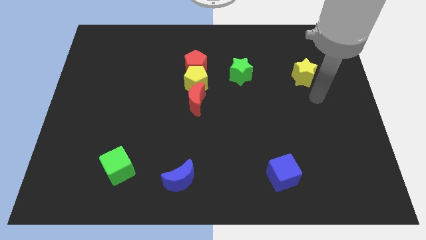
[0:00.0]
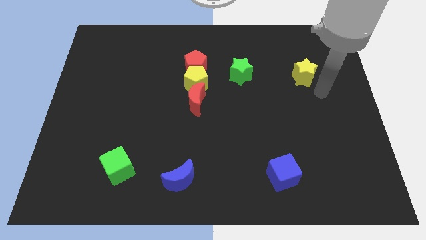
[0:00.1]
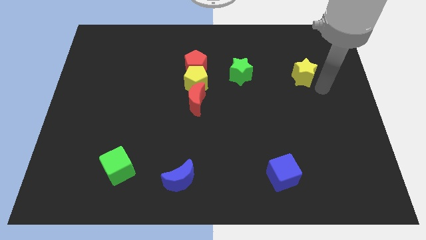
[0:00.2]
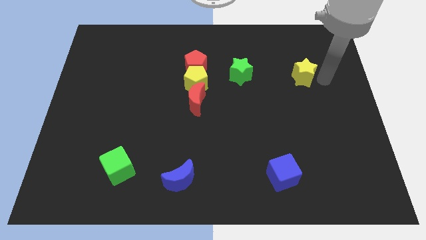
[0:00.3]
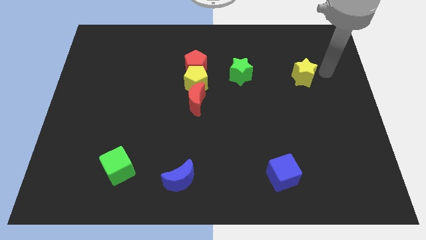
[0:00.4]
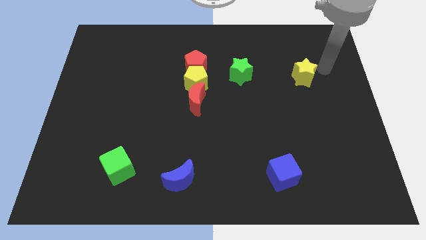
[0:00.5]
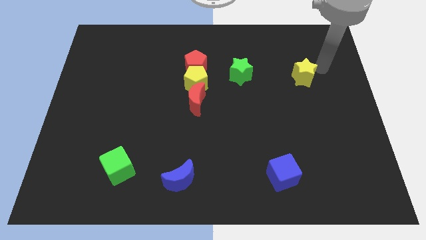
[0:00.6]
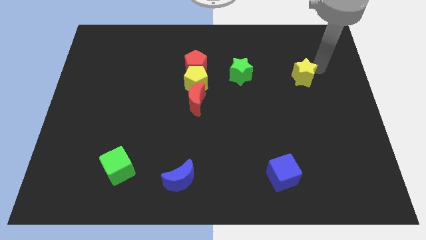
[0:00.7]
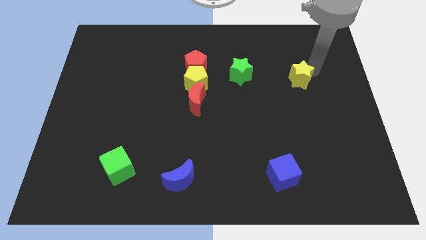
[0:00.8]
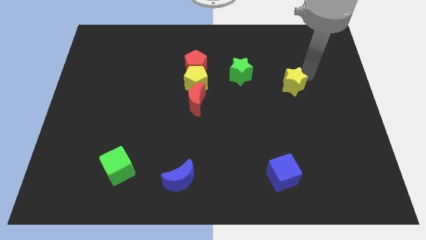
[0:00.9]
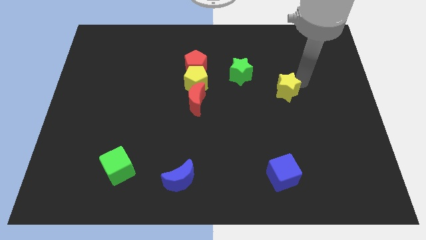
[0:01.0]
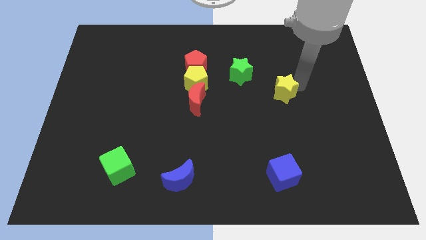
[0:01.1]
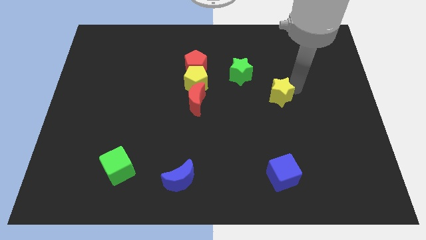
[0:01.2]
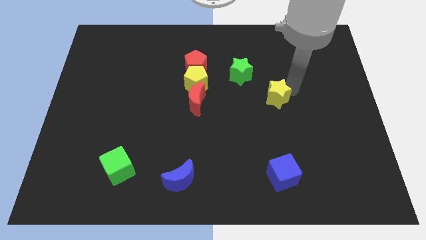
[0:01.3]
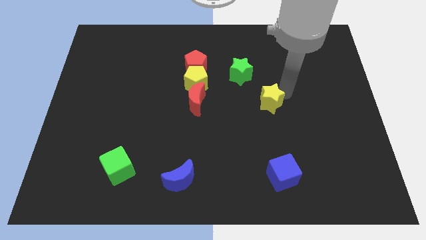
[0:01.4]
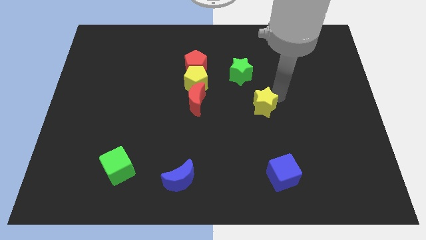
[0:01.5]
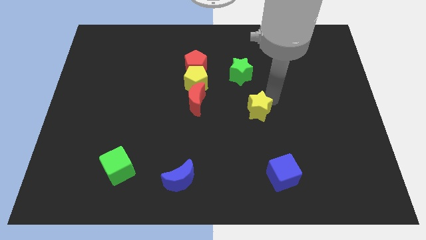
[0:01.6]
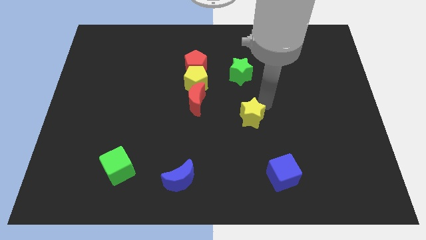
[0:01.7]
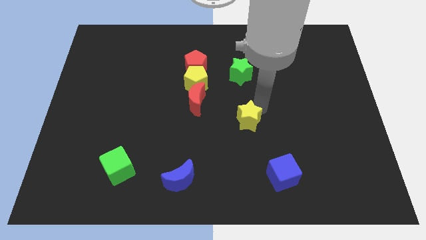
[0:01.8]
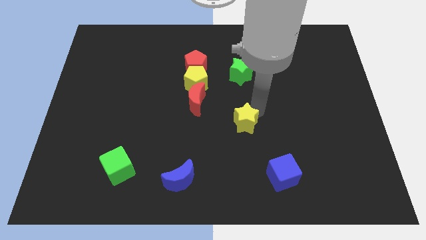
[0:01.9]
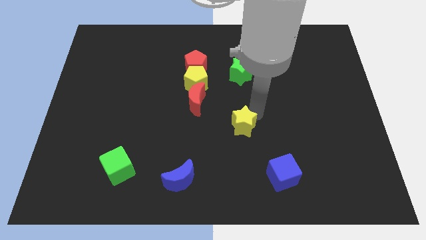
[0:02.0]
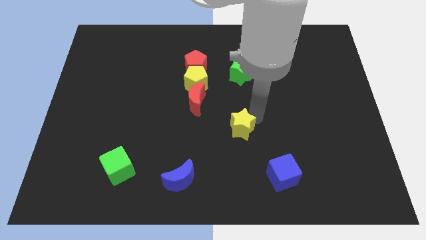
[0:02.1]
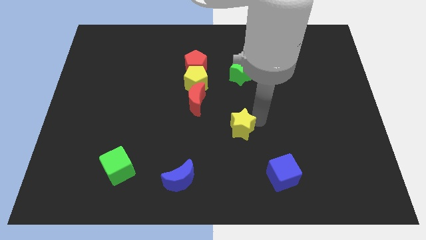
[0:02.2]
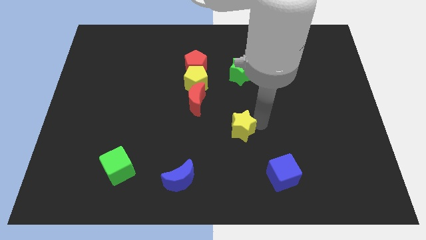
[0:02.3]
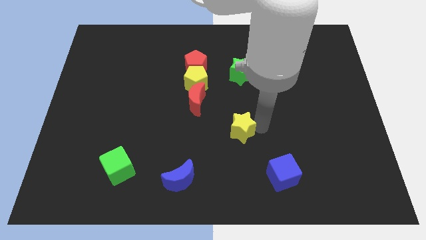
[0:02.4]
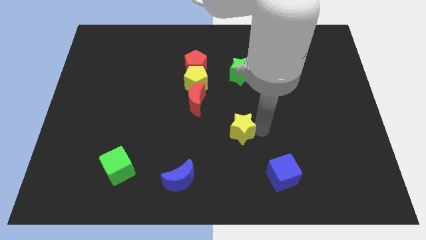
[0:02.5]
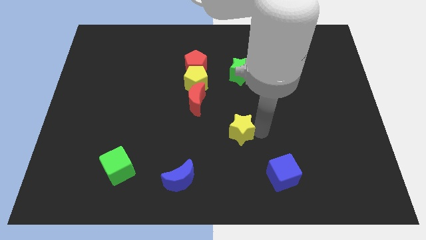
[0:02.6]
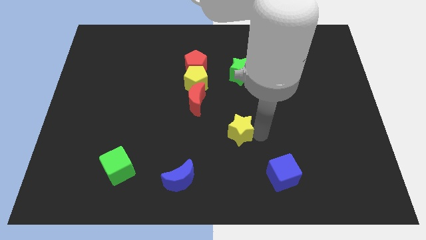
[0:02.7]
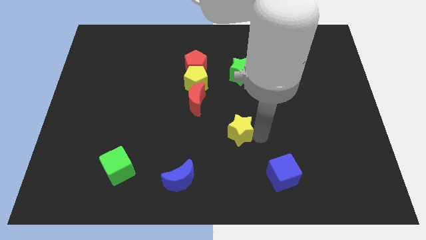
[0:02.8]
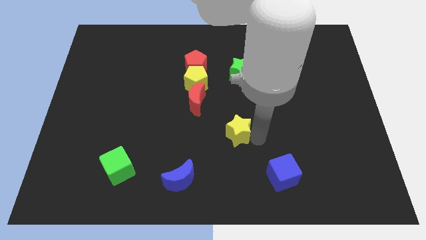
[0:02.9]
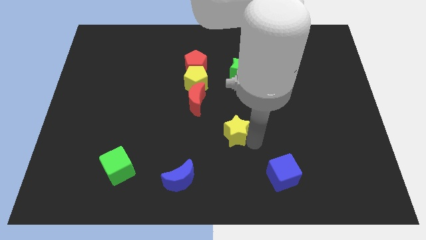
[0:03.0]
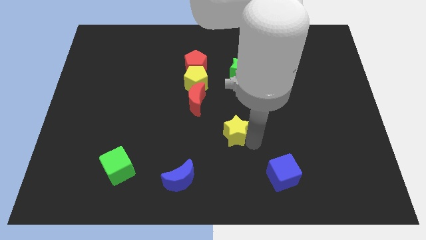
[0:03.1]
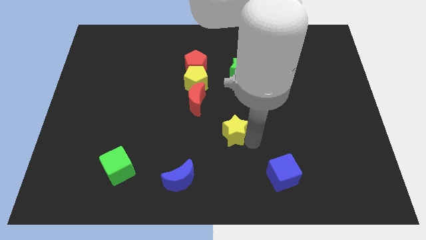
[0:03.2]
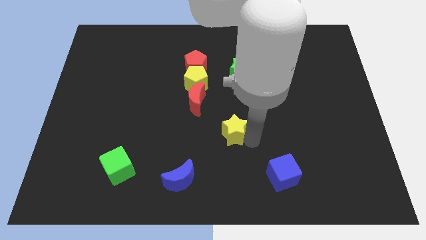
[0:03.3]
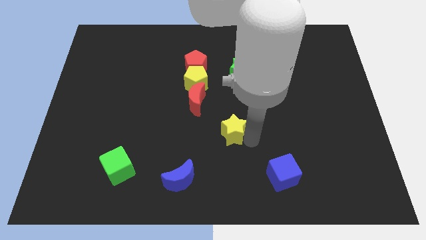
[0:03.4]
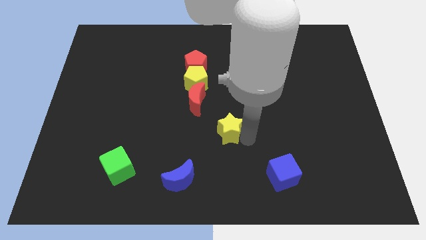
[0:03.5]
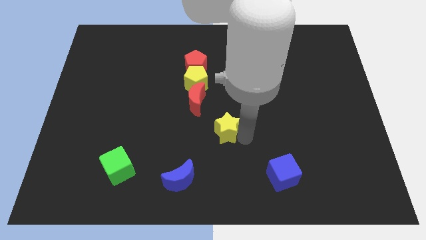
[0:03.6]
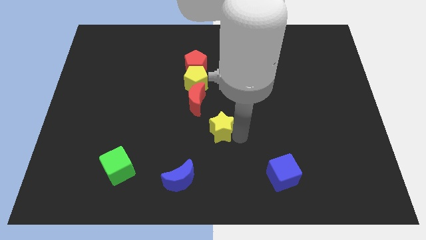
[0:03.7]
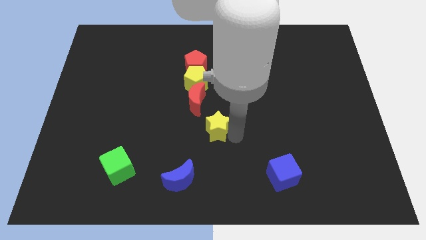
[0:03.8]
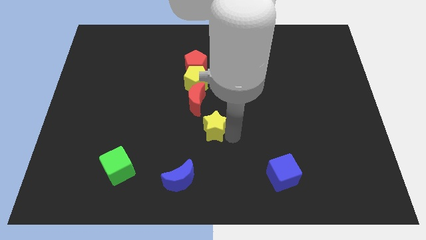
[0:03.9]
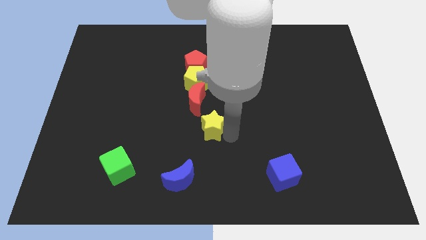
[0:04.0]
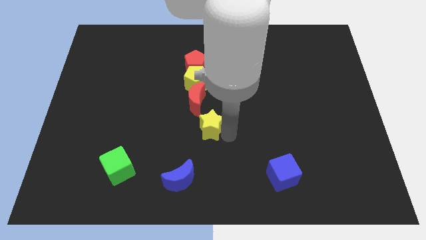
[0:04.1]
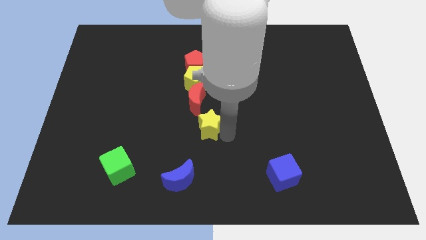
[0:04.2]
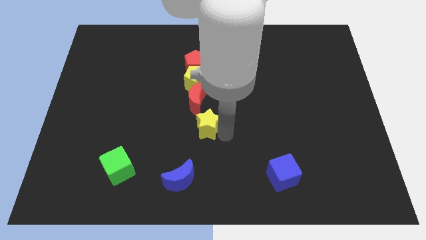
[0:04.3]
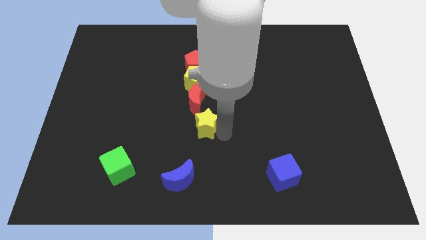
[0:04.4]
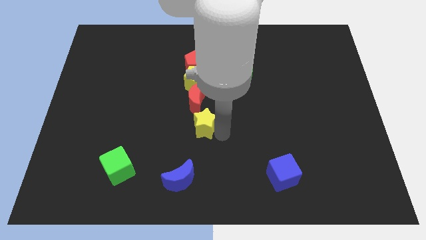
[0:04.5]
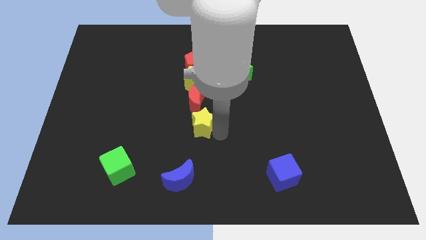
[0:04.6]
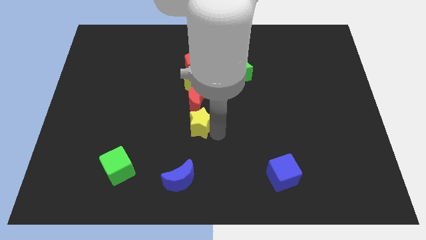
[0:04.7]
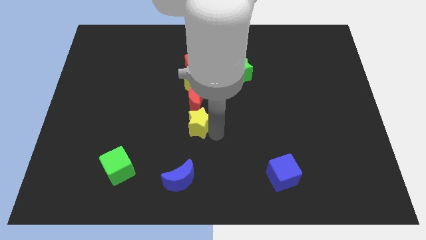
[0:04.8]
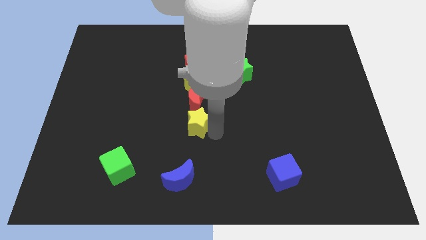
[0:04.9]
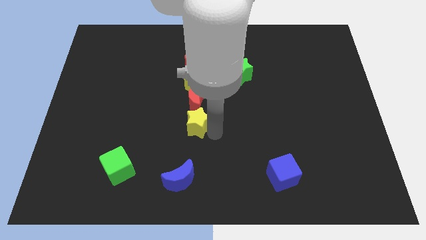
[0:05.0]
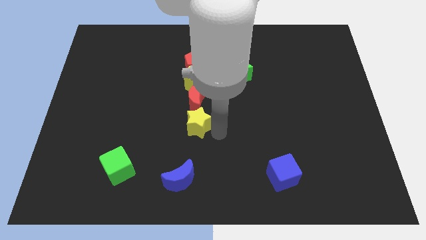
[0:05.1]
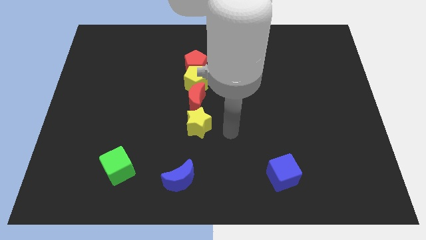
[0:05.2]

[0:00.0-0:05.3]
push the yellow star to the bottom of the red crescent

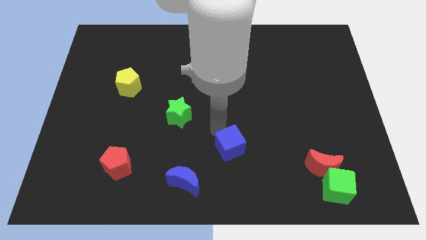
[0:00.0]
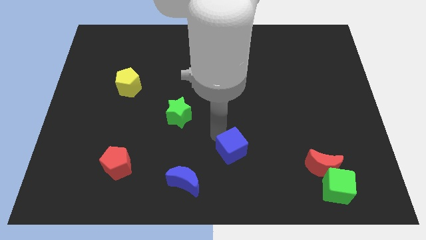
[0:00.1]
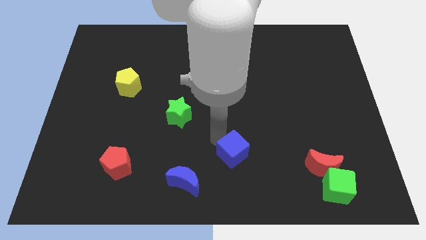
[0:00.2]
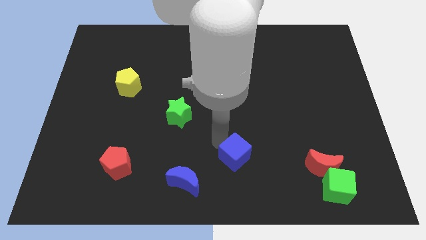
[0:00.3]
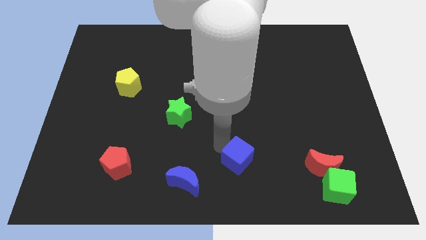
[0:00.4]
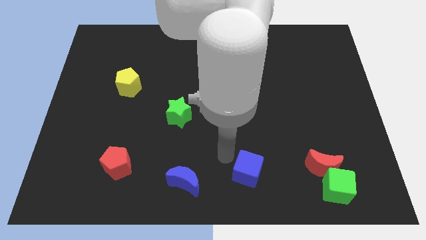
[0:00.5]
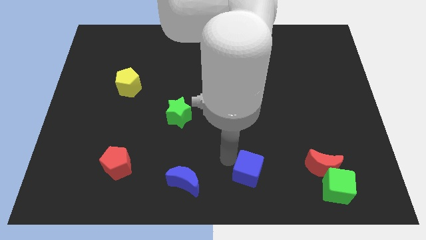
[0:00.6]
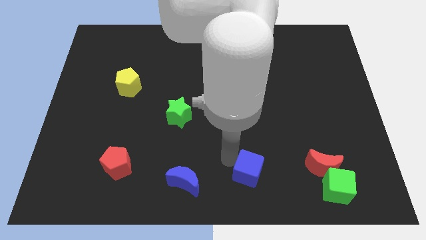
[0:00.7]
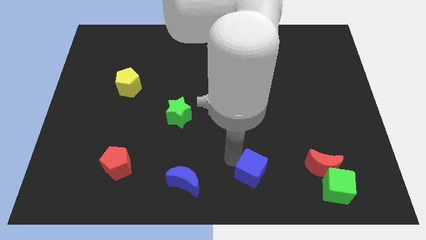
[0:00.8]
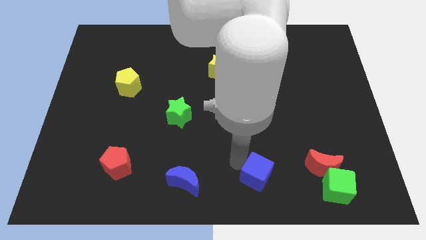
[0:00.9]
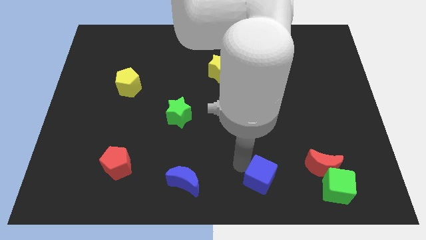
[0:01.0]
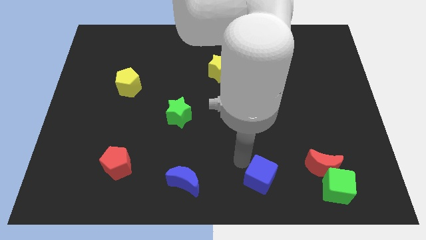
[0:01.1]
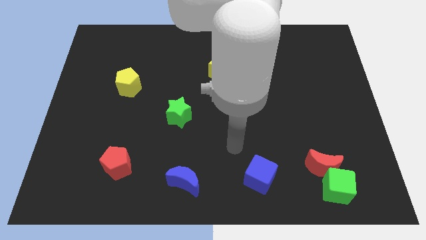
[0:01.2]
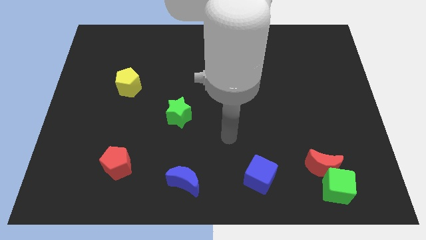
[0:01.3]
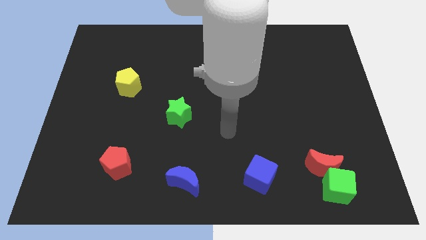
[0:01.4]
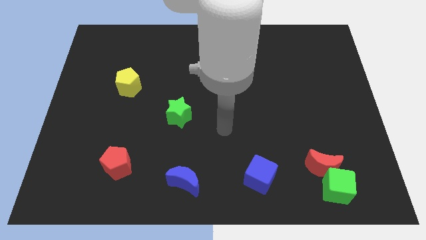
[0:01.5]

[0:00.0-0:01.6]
place the blue cube in between blue crescent and red crescent

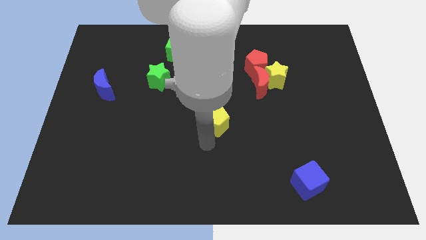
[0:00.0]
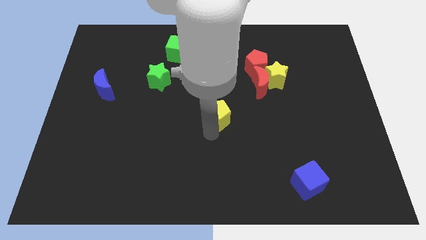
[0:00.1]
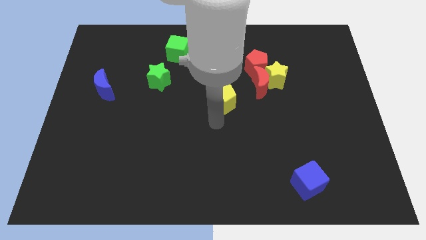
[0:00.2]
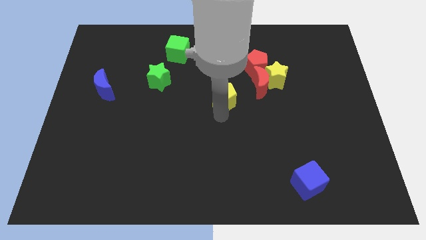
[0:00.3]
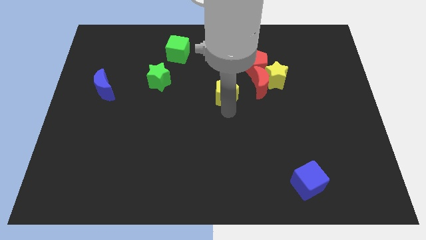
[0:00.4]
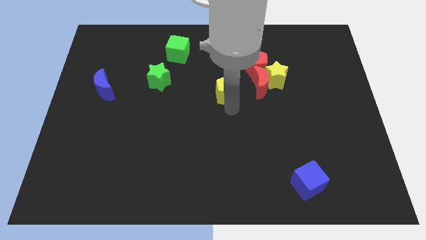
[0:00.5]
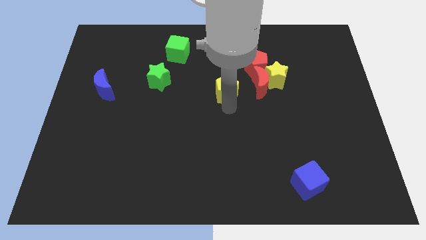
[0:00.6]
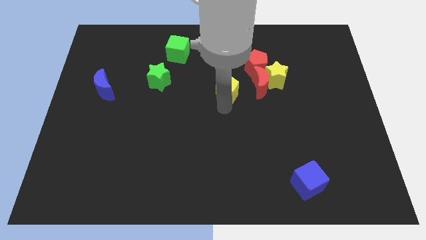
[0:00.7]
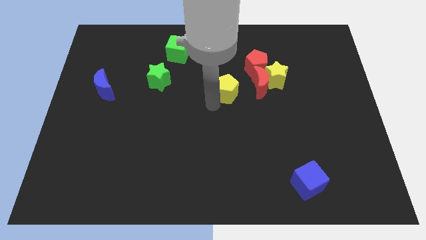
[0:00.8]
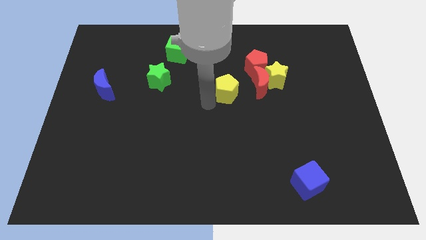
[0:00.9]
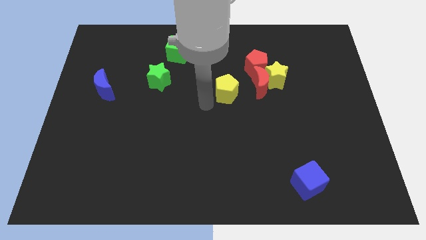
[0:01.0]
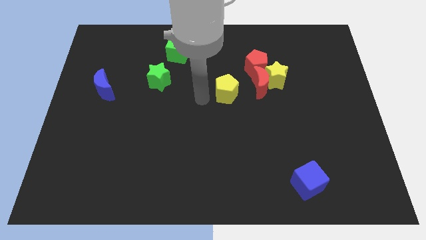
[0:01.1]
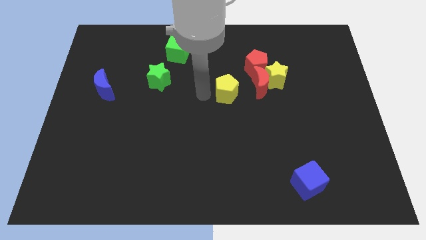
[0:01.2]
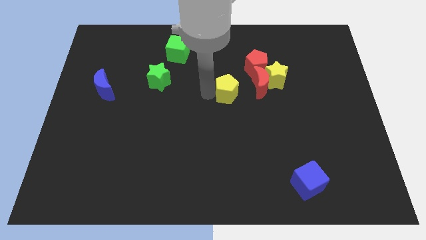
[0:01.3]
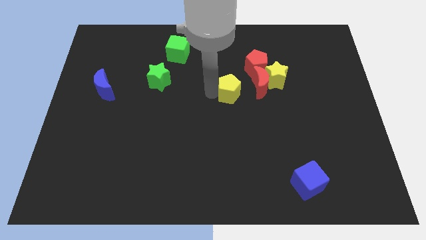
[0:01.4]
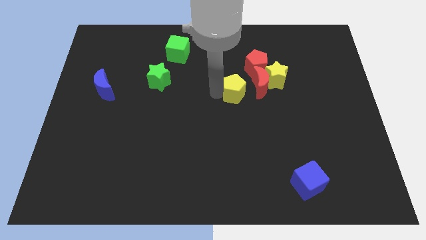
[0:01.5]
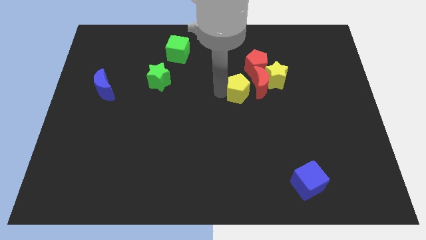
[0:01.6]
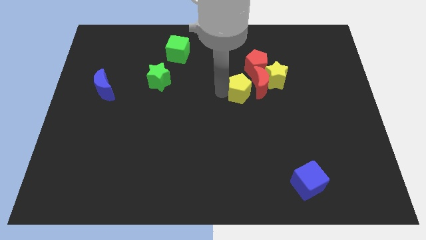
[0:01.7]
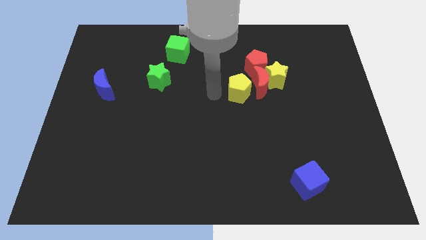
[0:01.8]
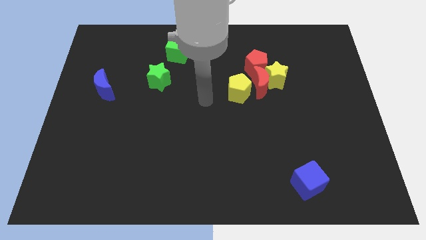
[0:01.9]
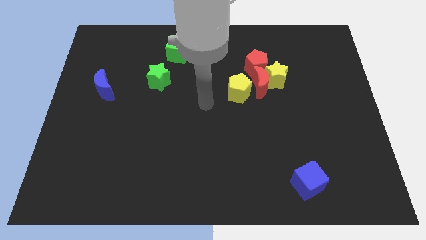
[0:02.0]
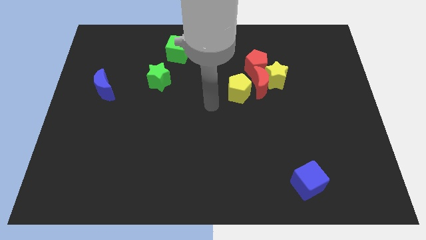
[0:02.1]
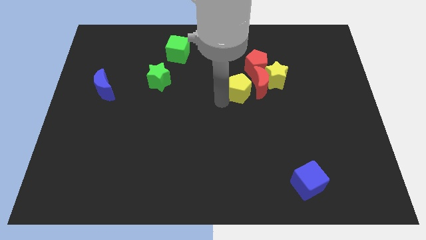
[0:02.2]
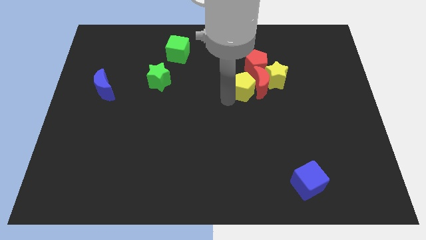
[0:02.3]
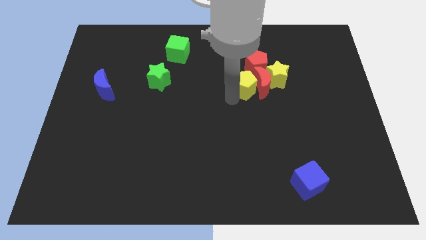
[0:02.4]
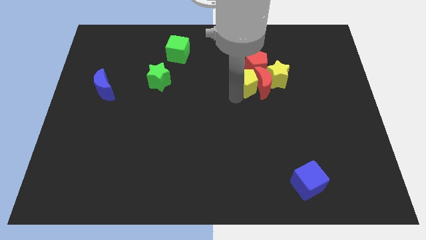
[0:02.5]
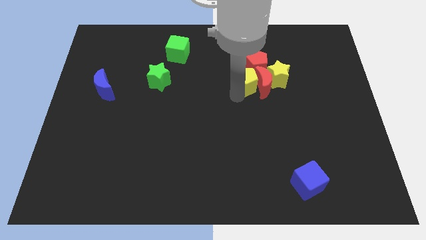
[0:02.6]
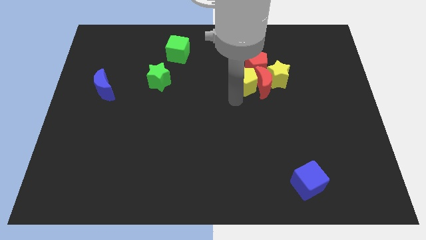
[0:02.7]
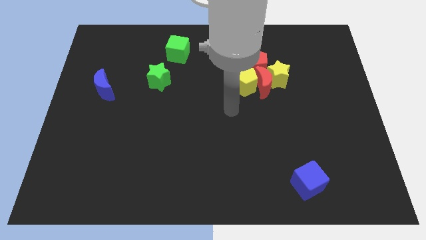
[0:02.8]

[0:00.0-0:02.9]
push the yellow pentagon into the red moon
